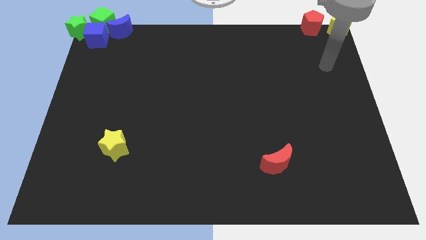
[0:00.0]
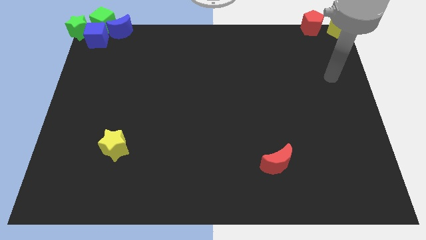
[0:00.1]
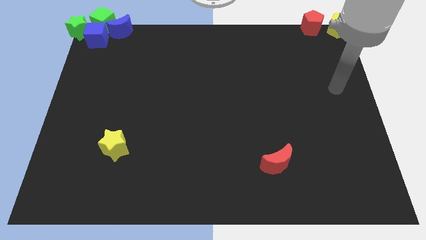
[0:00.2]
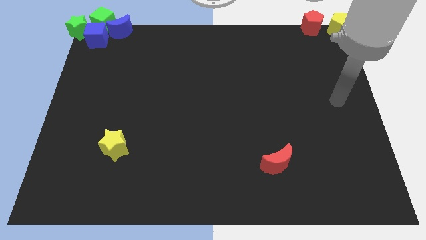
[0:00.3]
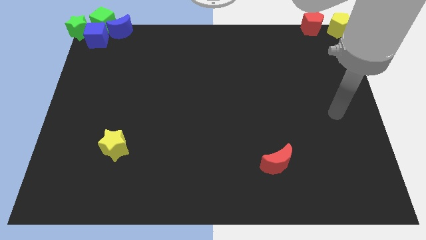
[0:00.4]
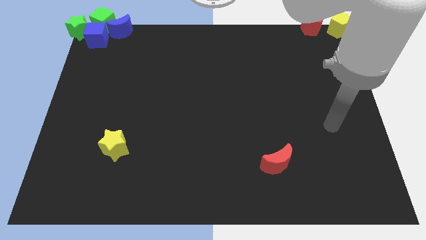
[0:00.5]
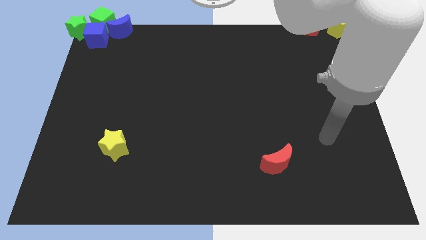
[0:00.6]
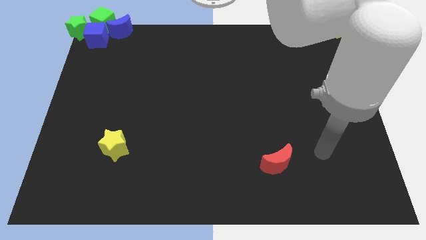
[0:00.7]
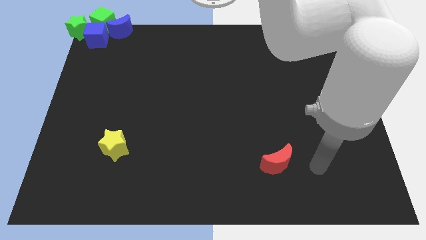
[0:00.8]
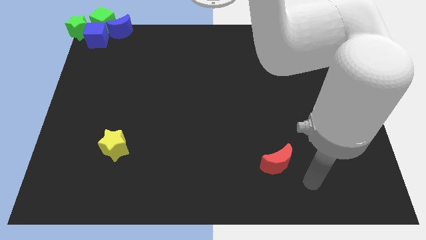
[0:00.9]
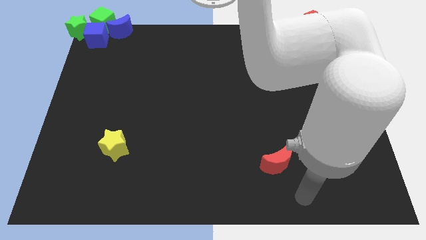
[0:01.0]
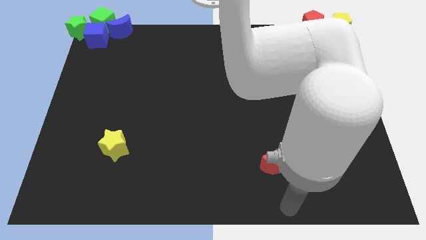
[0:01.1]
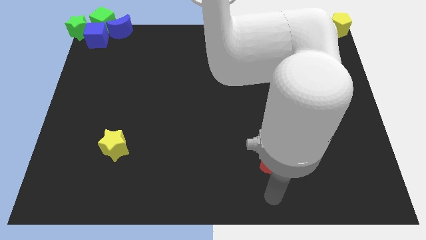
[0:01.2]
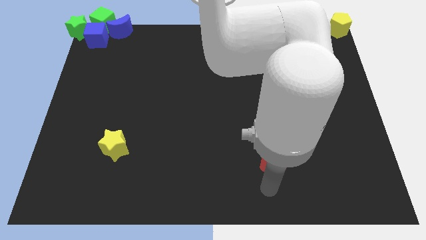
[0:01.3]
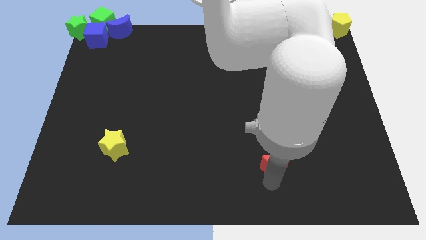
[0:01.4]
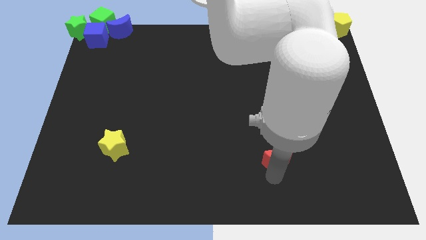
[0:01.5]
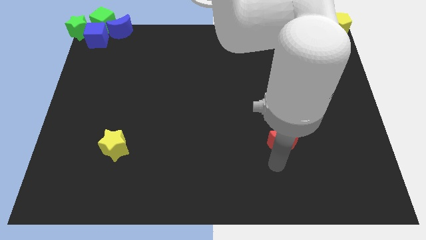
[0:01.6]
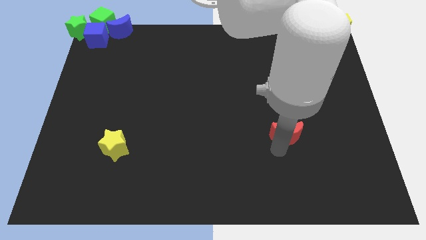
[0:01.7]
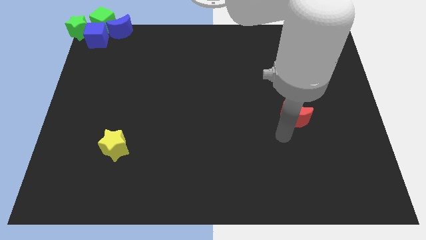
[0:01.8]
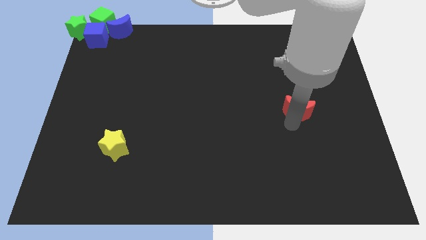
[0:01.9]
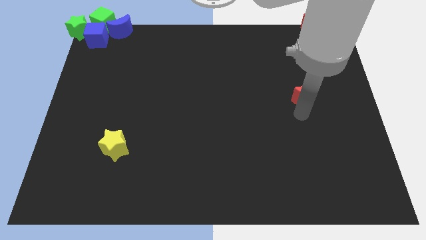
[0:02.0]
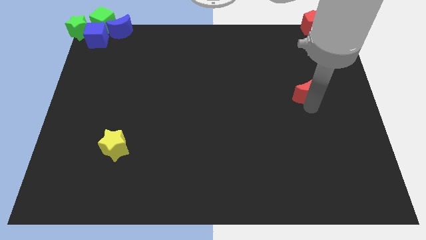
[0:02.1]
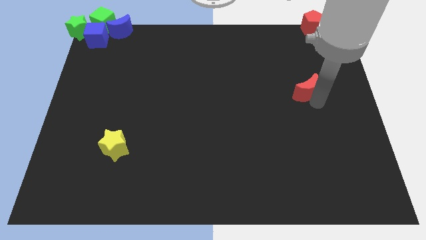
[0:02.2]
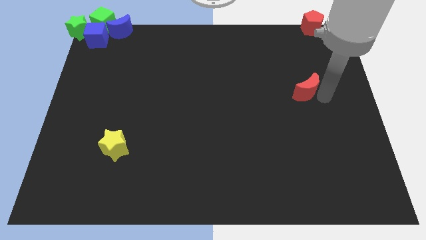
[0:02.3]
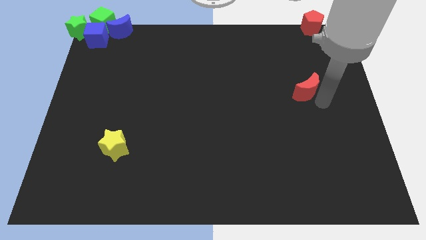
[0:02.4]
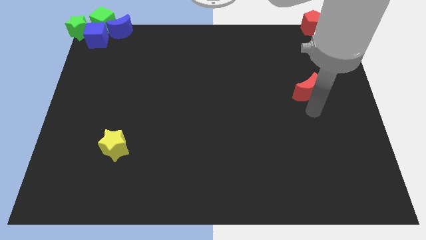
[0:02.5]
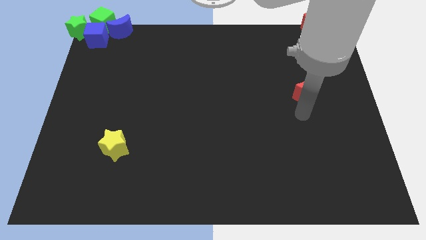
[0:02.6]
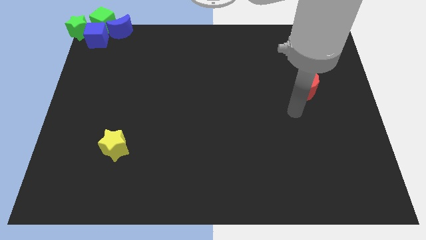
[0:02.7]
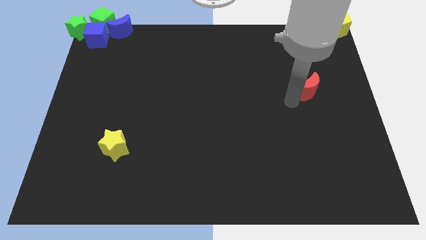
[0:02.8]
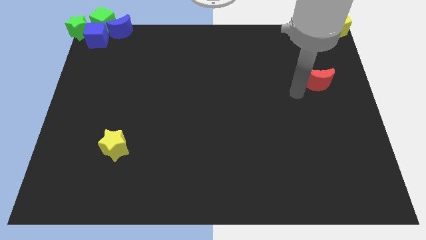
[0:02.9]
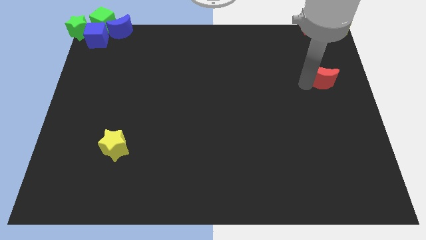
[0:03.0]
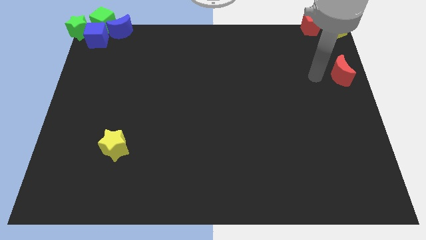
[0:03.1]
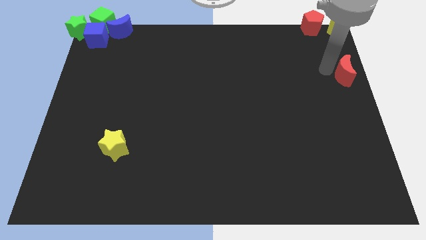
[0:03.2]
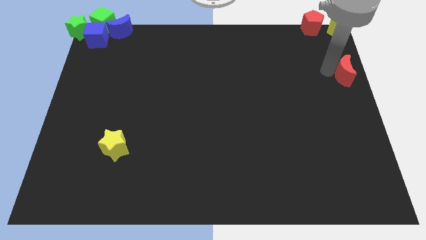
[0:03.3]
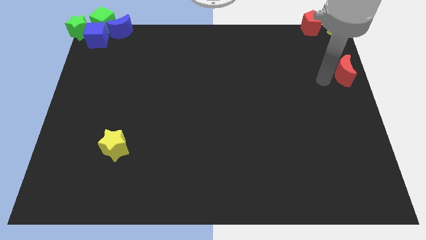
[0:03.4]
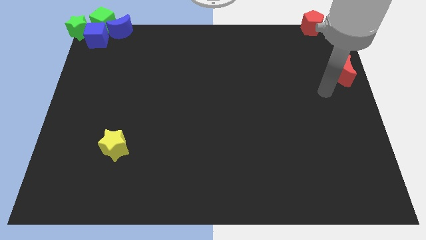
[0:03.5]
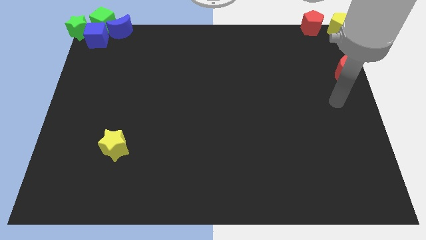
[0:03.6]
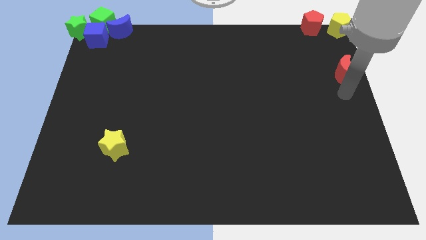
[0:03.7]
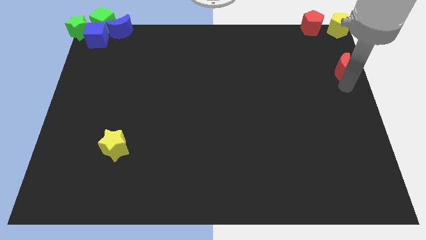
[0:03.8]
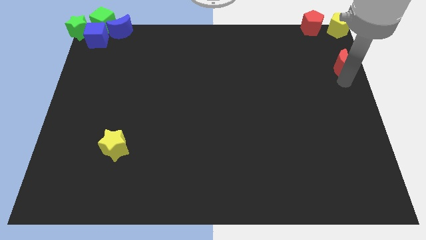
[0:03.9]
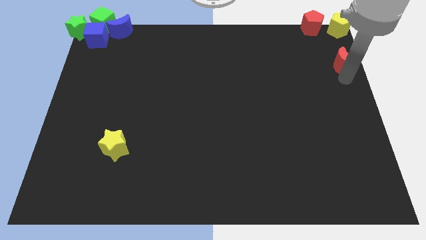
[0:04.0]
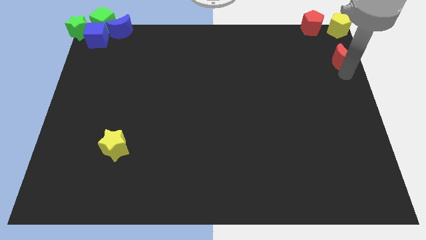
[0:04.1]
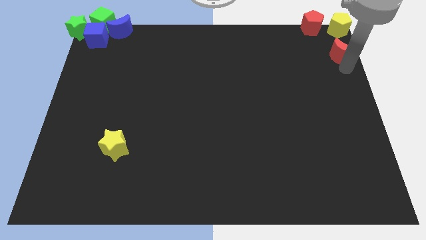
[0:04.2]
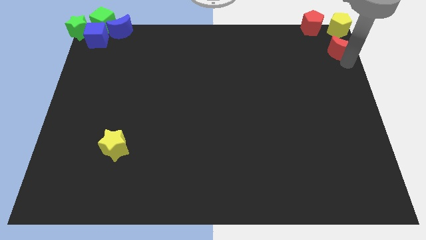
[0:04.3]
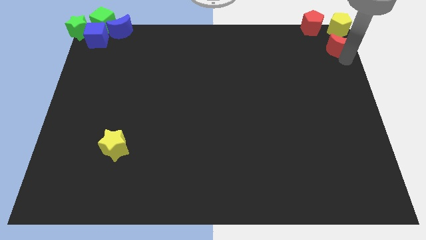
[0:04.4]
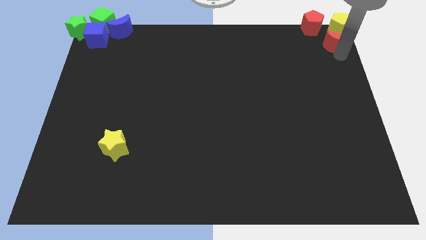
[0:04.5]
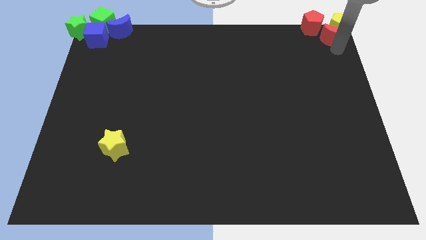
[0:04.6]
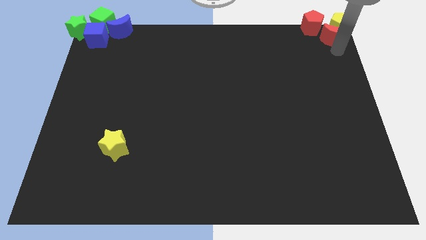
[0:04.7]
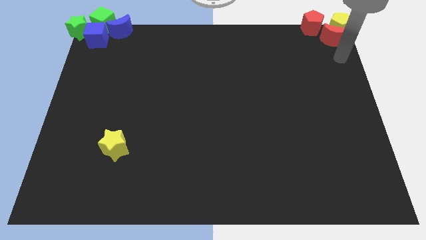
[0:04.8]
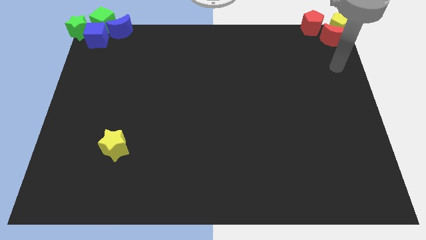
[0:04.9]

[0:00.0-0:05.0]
push the red moon below the yellow pentagon

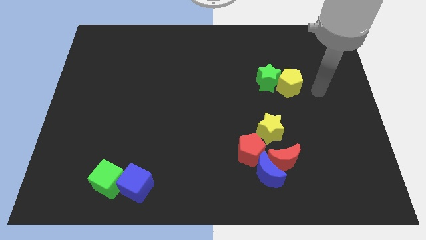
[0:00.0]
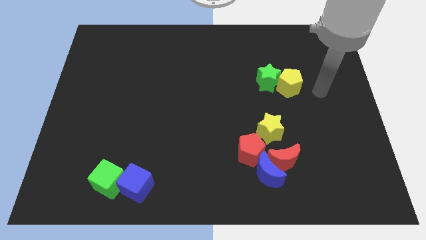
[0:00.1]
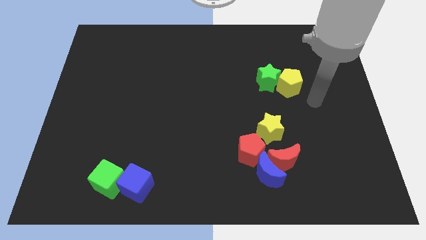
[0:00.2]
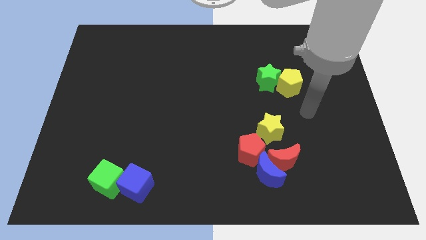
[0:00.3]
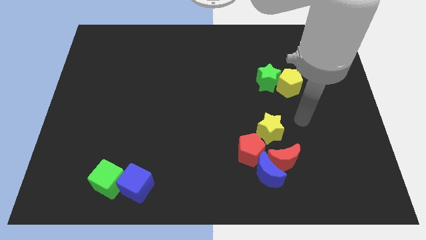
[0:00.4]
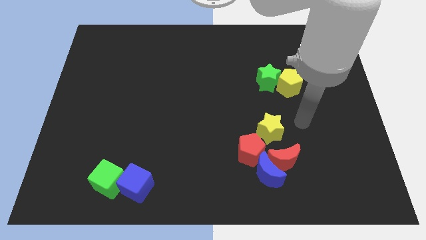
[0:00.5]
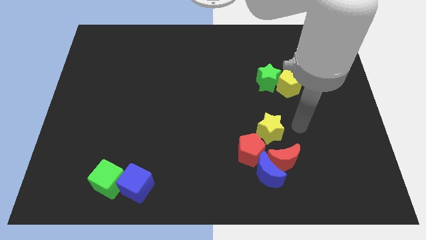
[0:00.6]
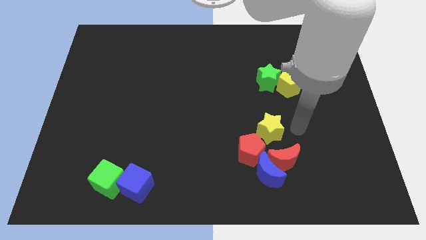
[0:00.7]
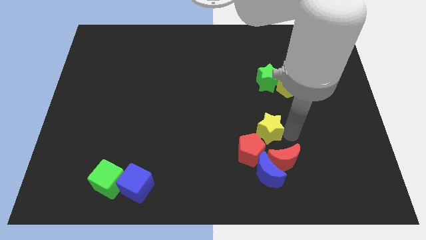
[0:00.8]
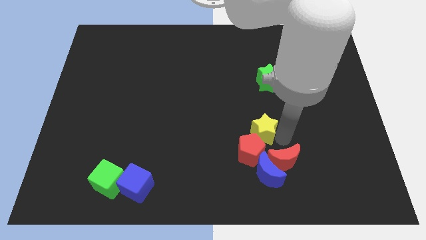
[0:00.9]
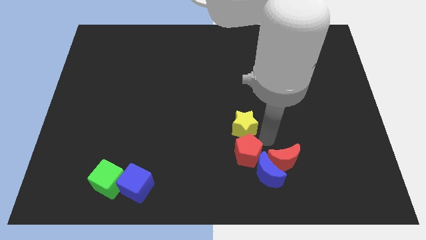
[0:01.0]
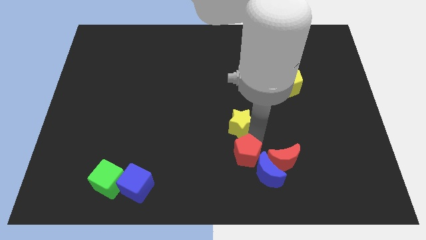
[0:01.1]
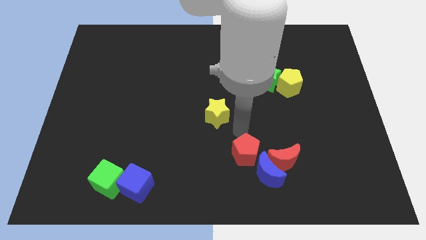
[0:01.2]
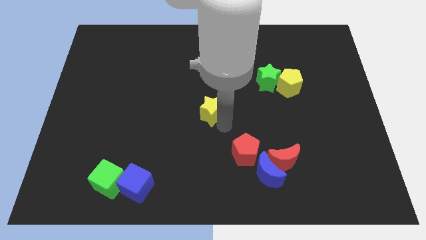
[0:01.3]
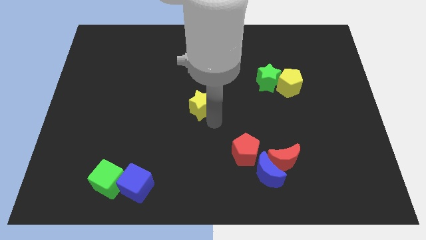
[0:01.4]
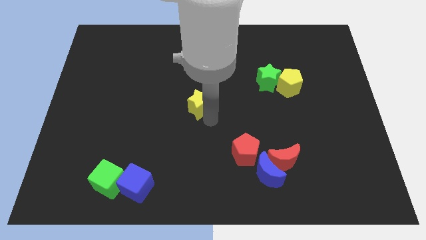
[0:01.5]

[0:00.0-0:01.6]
move the yellow star away from the red pentagon

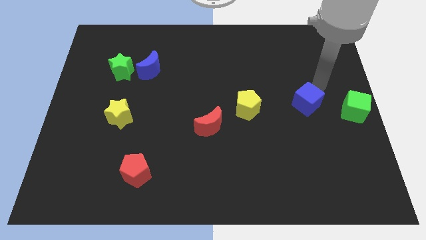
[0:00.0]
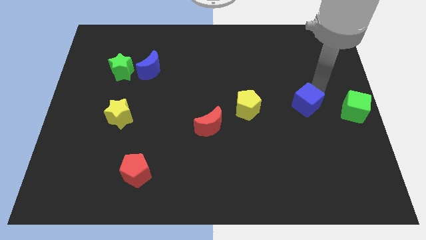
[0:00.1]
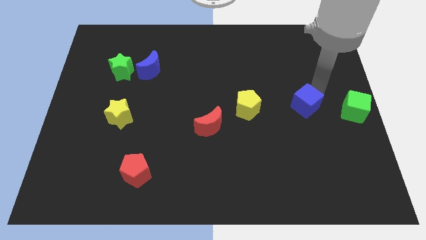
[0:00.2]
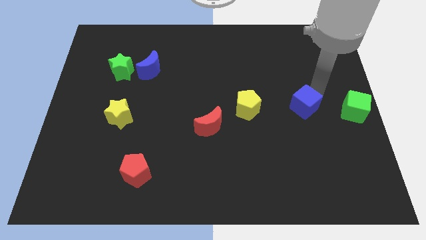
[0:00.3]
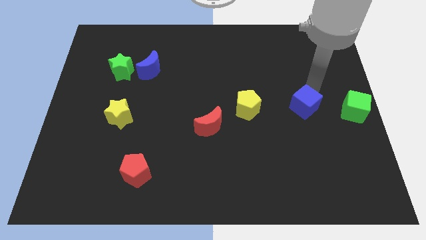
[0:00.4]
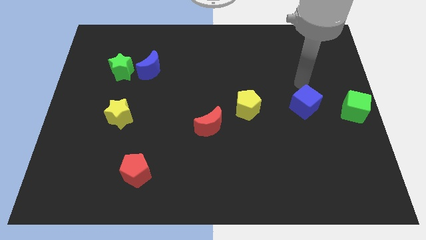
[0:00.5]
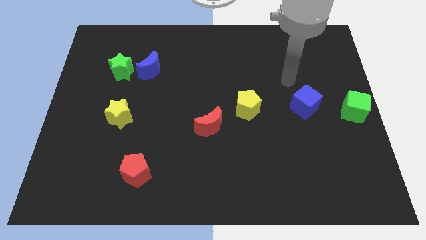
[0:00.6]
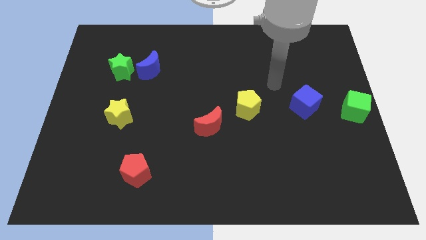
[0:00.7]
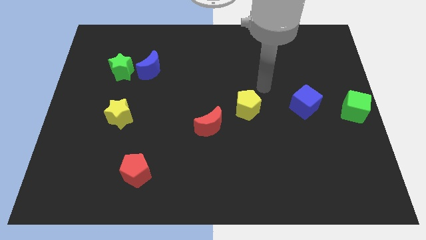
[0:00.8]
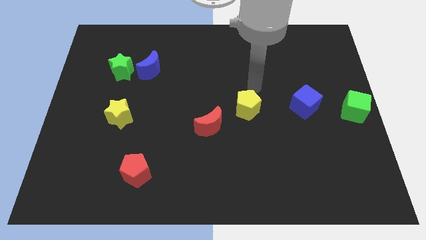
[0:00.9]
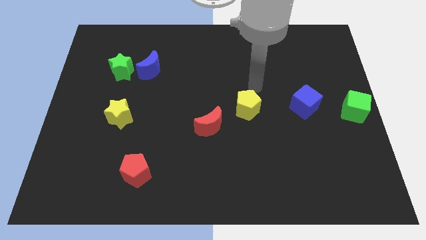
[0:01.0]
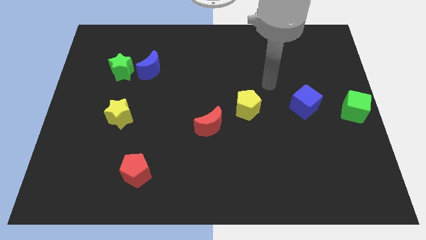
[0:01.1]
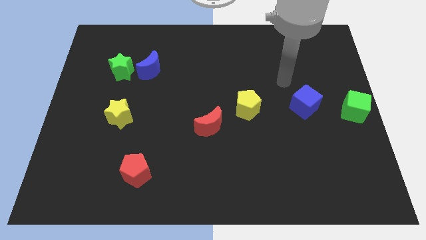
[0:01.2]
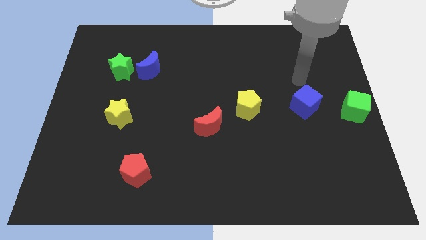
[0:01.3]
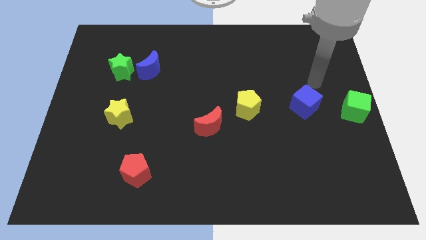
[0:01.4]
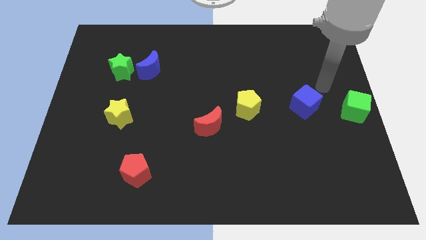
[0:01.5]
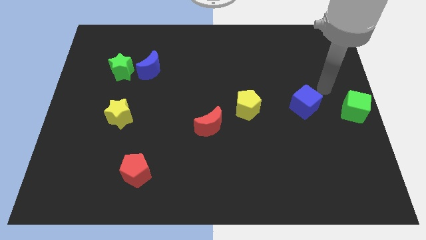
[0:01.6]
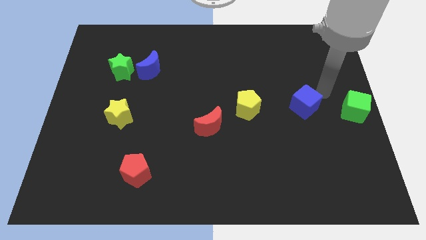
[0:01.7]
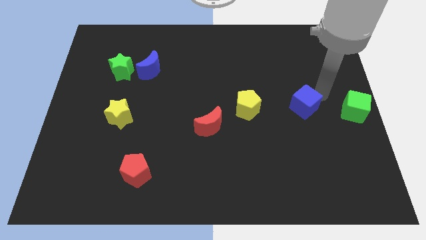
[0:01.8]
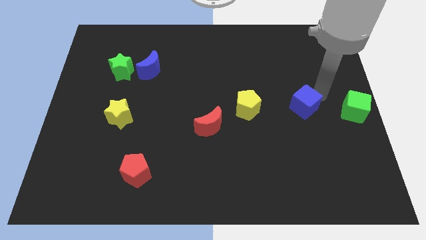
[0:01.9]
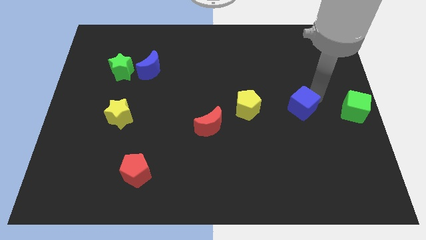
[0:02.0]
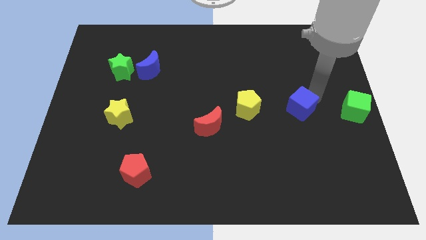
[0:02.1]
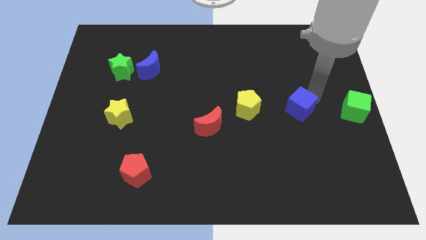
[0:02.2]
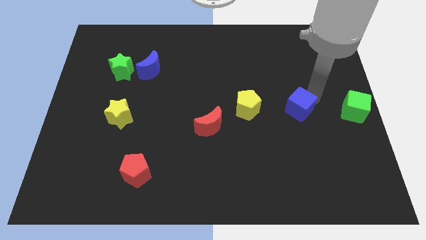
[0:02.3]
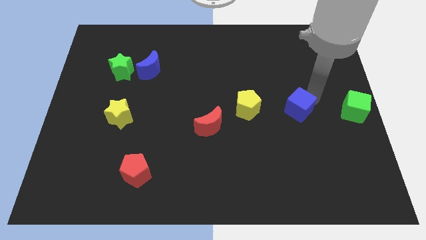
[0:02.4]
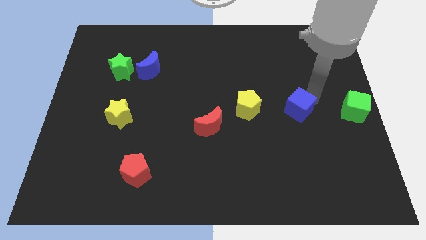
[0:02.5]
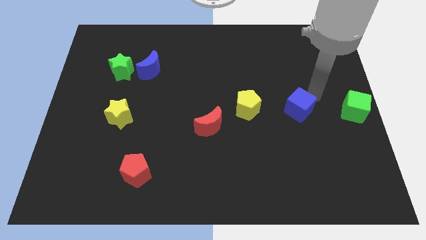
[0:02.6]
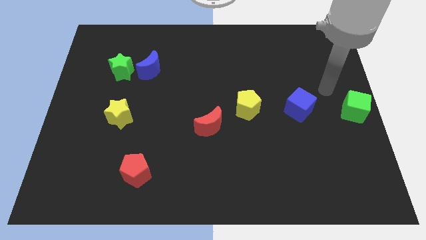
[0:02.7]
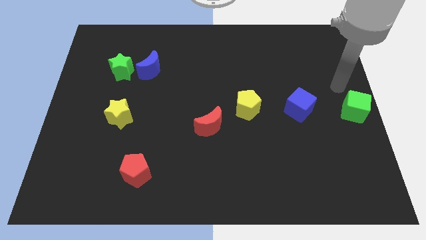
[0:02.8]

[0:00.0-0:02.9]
move the blue cube slightly towards the right side of the yellow pentagon
